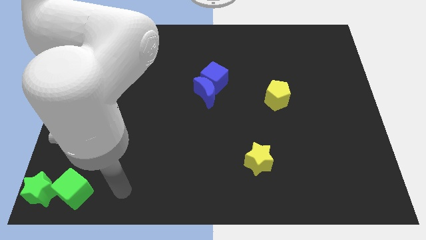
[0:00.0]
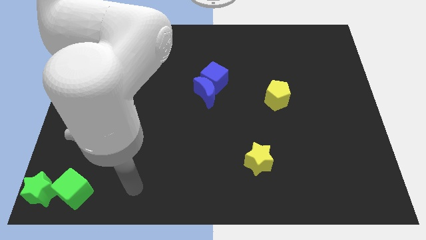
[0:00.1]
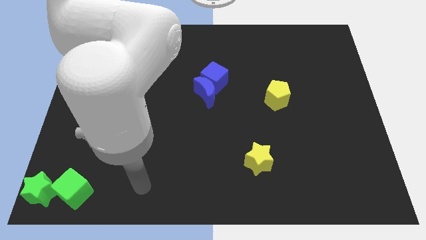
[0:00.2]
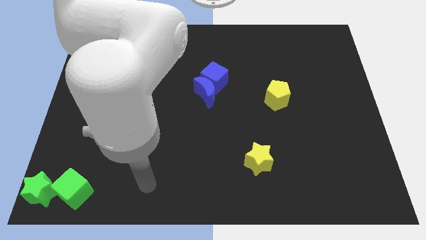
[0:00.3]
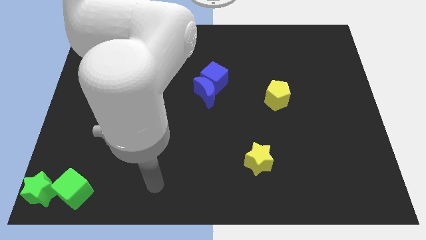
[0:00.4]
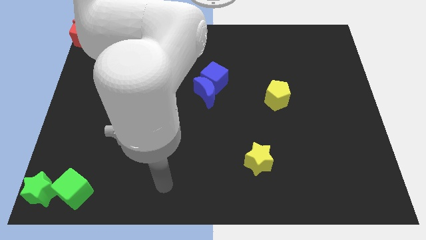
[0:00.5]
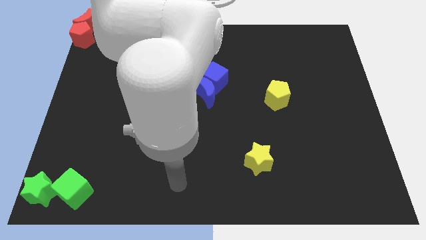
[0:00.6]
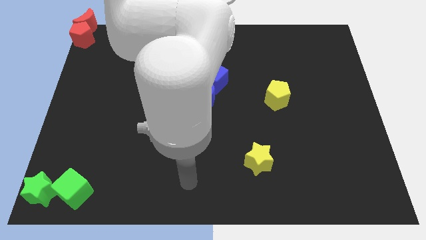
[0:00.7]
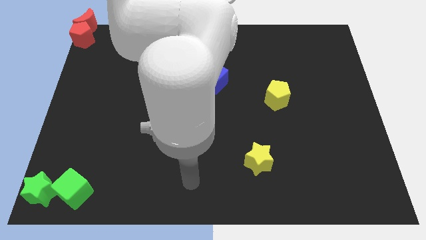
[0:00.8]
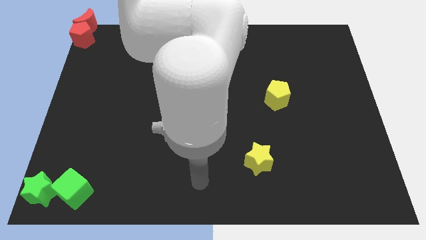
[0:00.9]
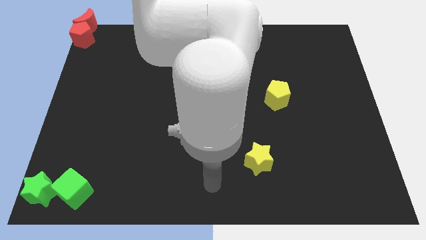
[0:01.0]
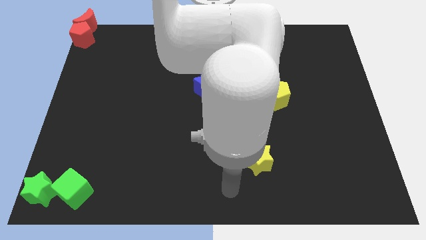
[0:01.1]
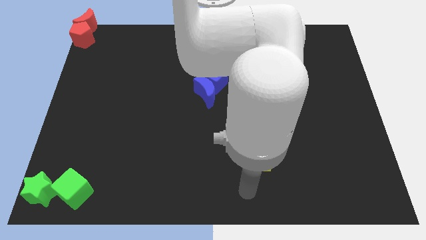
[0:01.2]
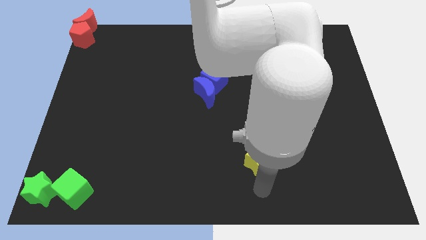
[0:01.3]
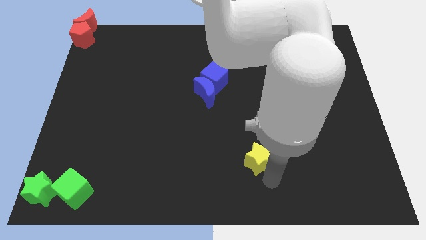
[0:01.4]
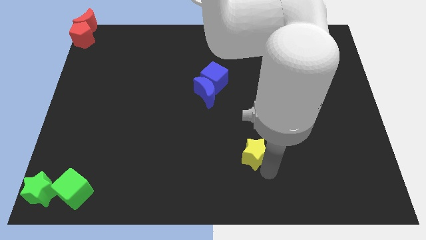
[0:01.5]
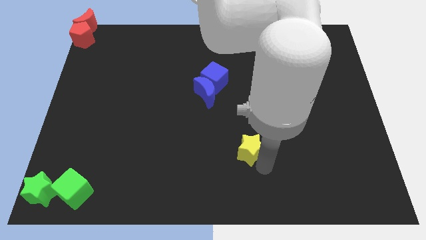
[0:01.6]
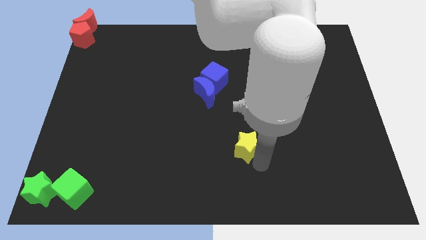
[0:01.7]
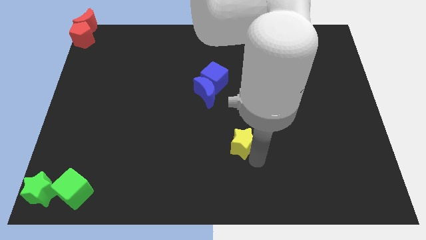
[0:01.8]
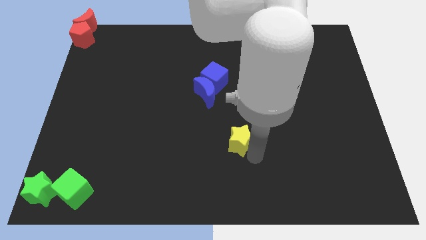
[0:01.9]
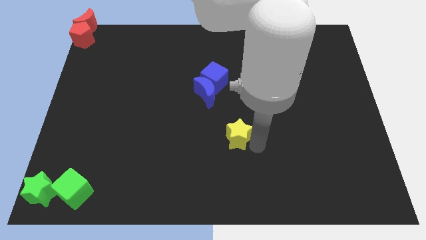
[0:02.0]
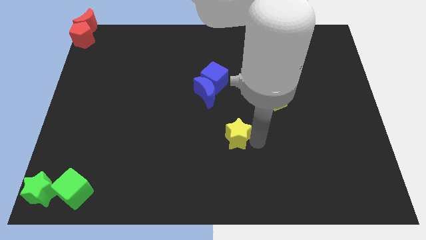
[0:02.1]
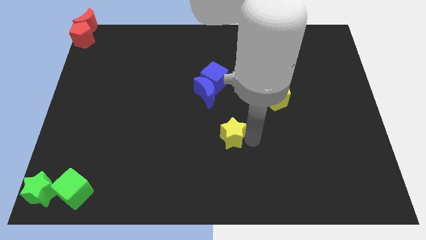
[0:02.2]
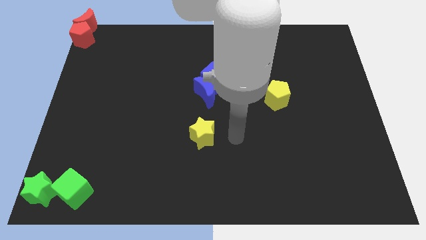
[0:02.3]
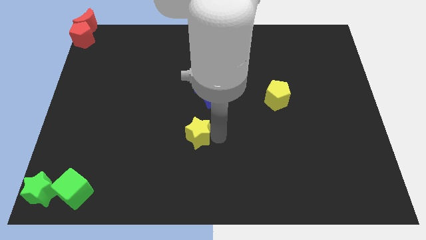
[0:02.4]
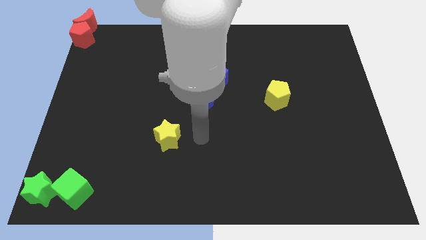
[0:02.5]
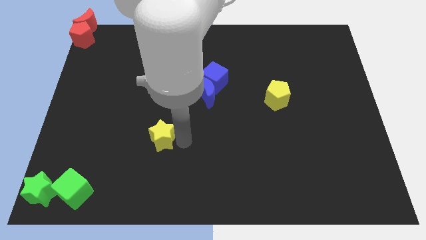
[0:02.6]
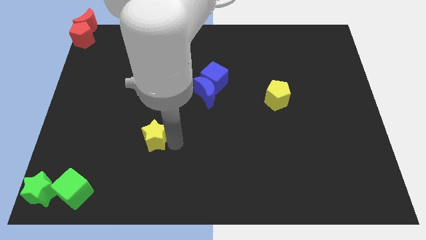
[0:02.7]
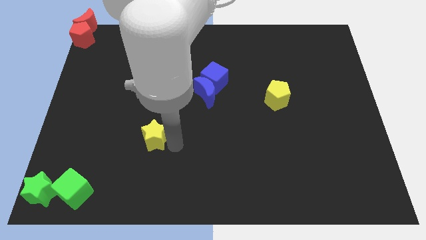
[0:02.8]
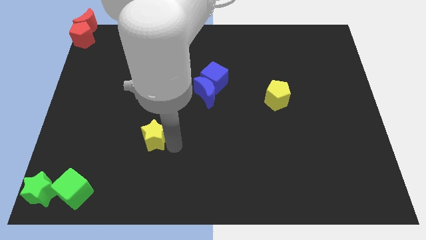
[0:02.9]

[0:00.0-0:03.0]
push the yellow star between the blue moon and green cube

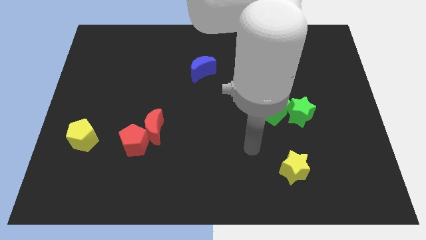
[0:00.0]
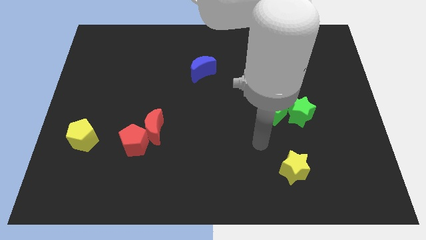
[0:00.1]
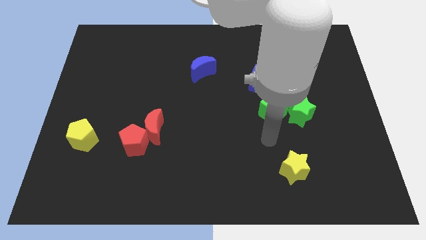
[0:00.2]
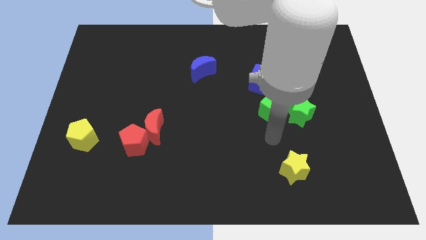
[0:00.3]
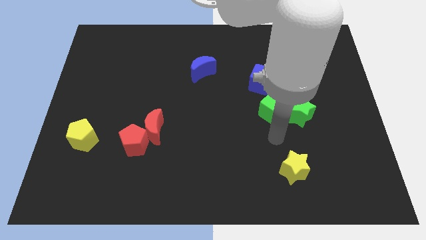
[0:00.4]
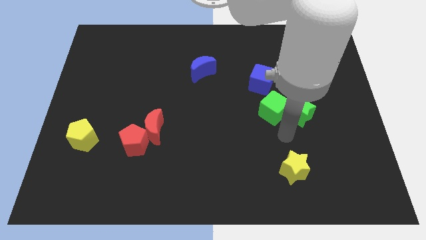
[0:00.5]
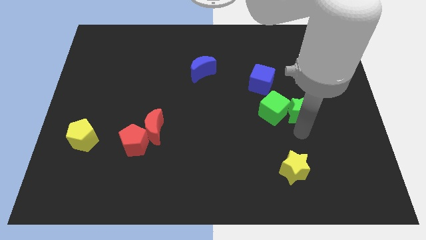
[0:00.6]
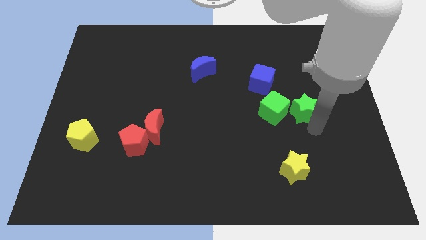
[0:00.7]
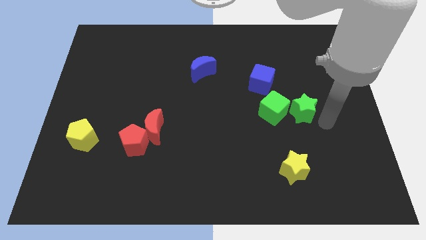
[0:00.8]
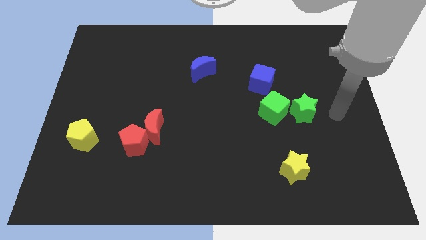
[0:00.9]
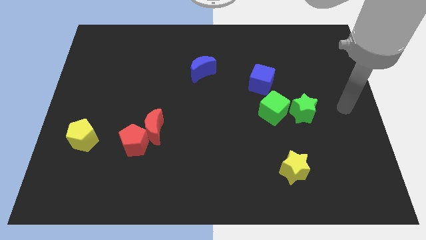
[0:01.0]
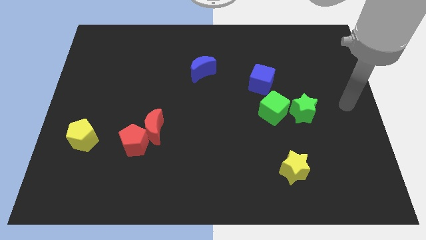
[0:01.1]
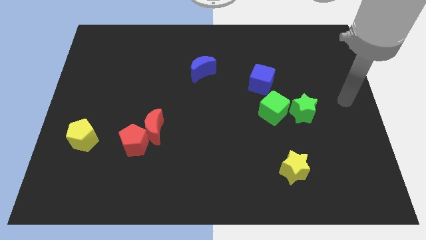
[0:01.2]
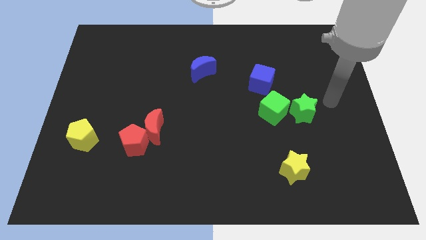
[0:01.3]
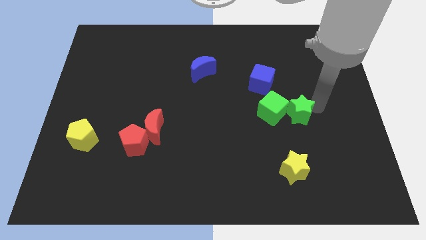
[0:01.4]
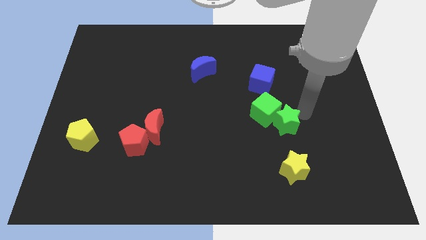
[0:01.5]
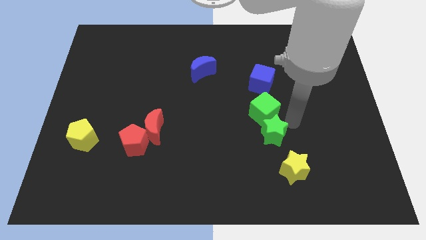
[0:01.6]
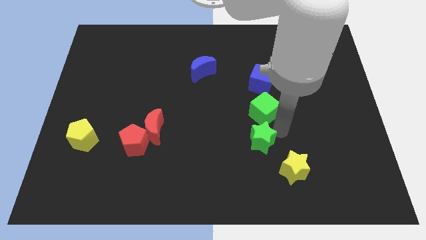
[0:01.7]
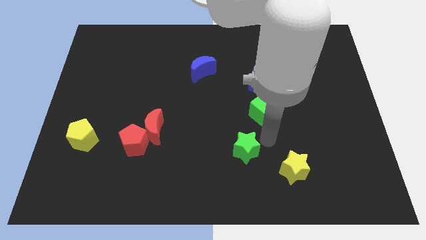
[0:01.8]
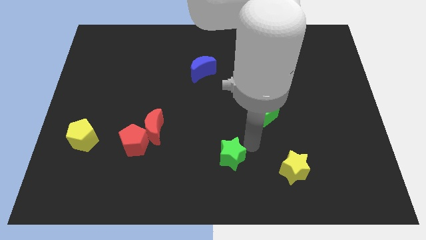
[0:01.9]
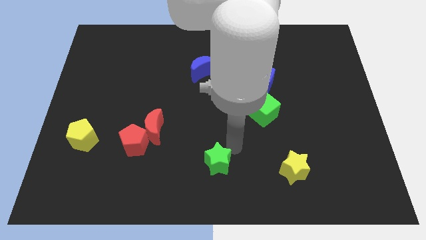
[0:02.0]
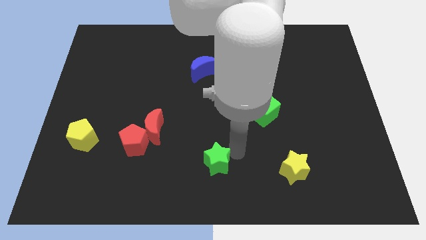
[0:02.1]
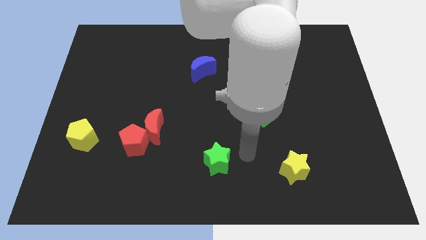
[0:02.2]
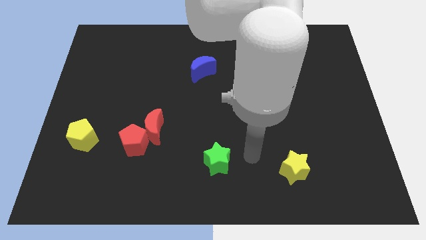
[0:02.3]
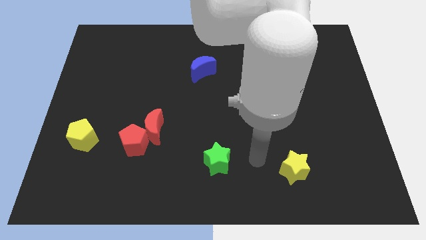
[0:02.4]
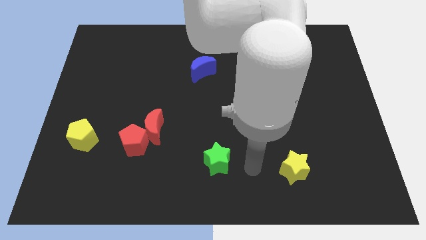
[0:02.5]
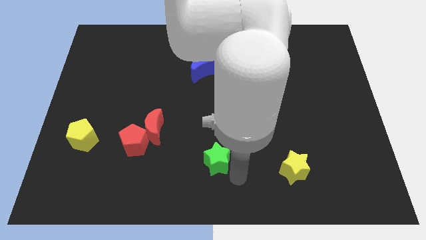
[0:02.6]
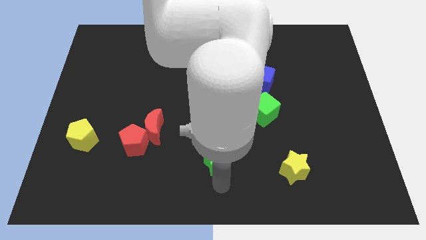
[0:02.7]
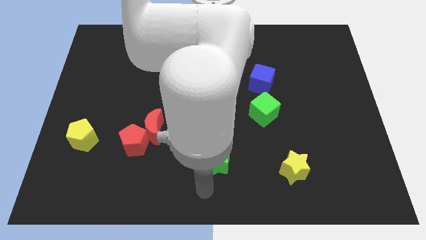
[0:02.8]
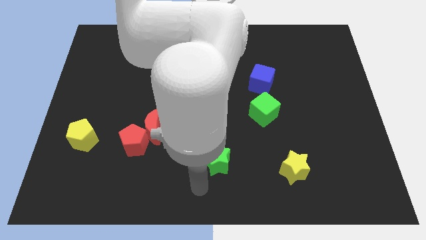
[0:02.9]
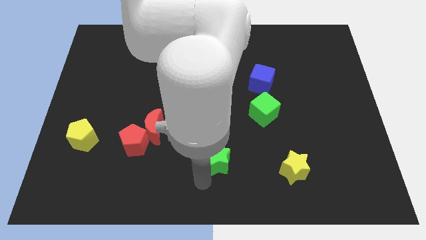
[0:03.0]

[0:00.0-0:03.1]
push the green star towards the bottom of the board

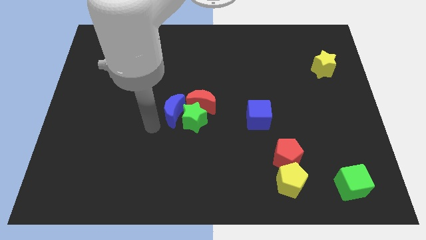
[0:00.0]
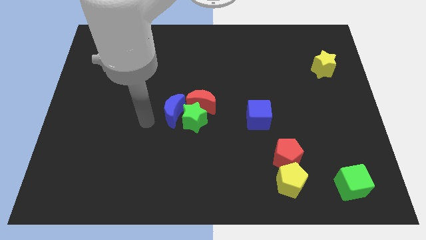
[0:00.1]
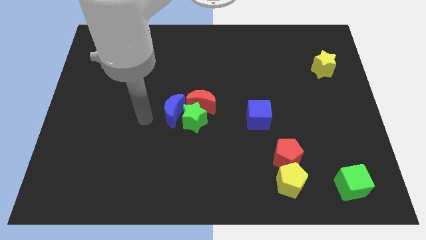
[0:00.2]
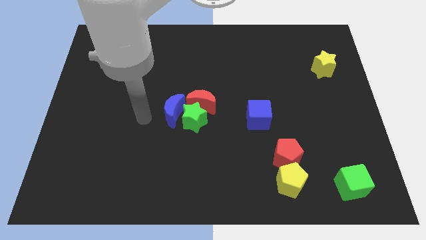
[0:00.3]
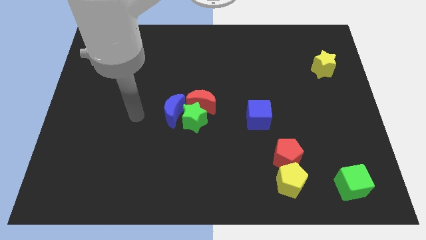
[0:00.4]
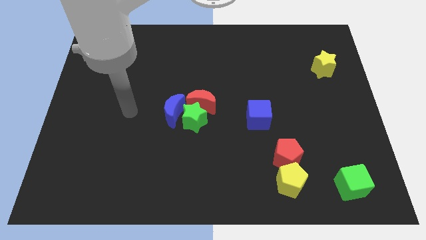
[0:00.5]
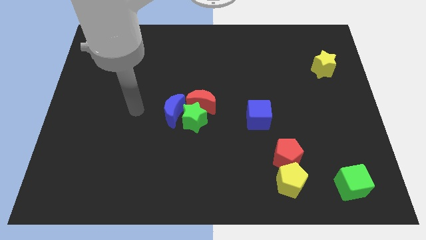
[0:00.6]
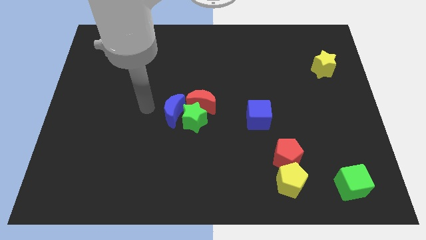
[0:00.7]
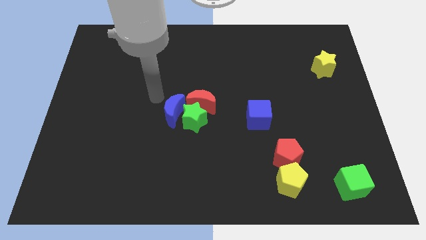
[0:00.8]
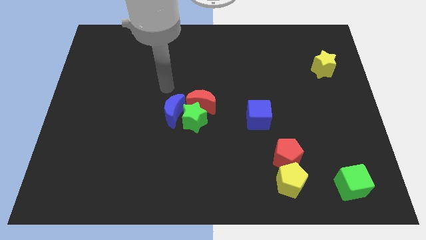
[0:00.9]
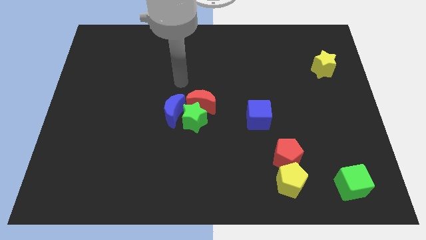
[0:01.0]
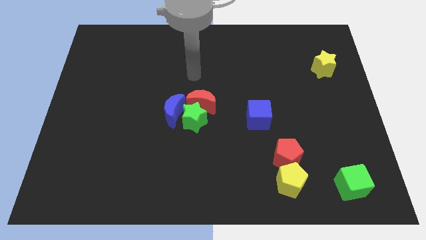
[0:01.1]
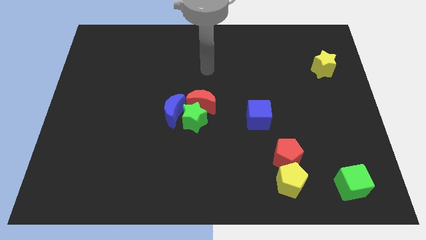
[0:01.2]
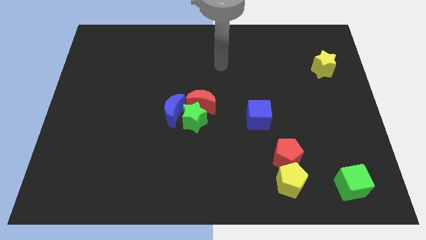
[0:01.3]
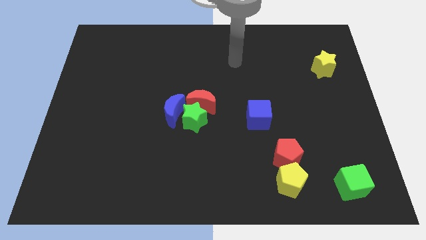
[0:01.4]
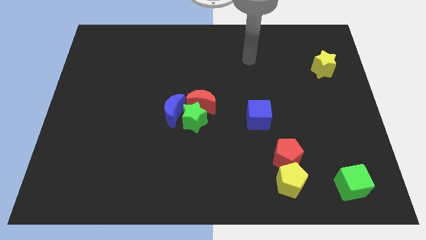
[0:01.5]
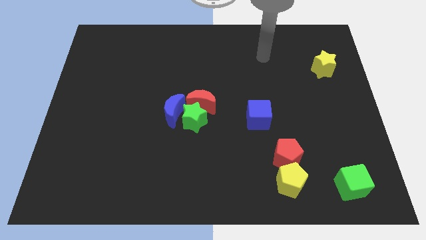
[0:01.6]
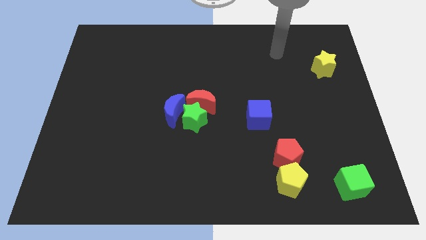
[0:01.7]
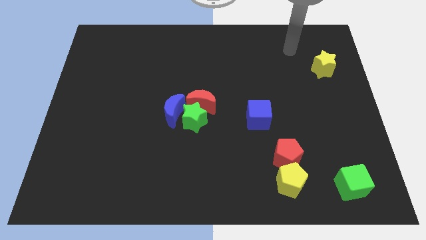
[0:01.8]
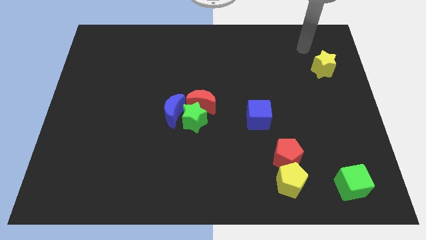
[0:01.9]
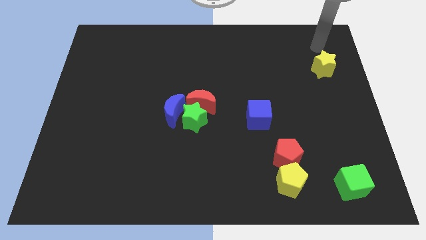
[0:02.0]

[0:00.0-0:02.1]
point your arm on top of yellow star

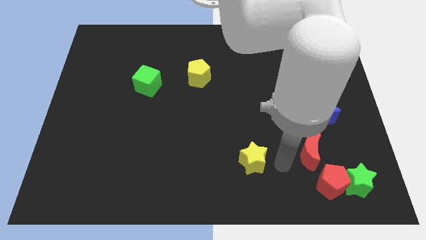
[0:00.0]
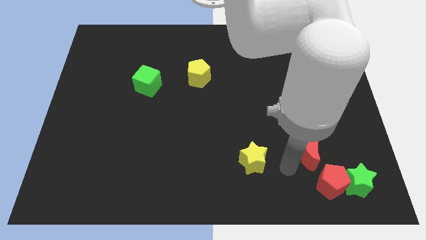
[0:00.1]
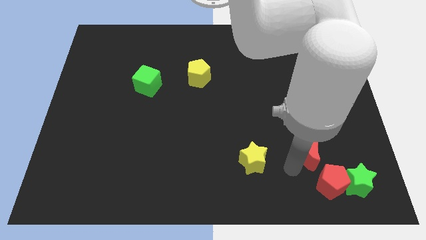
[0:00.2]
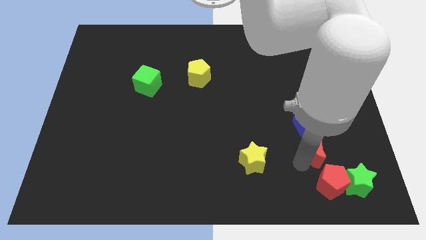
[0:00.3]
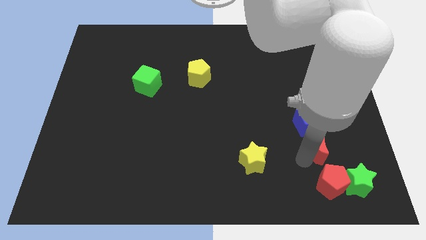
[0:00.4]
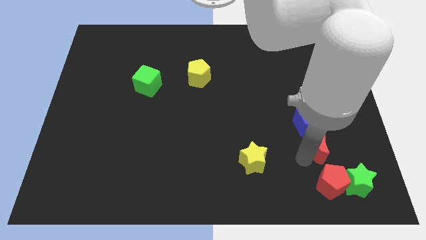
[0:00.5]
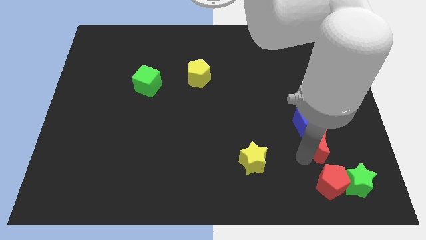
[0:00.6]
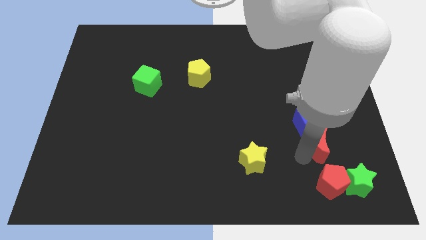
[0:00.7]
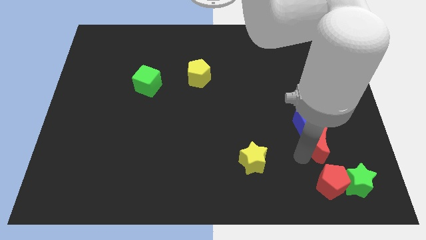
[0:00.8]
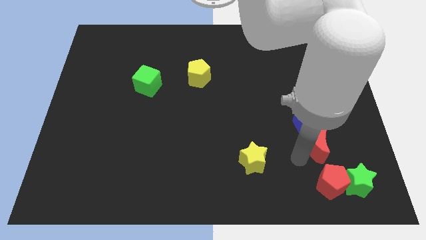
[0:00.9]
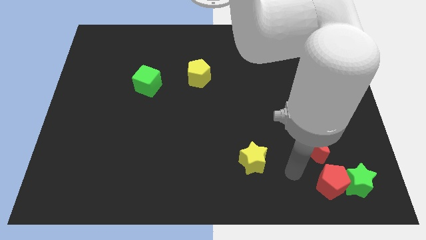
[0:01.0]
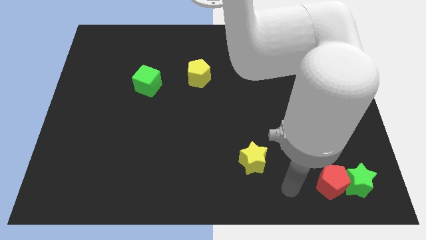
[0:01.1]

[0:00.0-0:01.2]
move the red crescent above to the red pentagon
